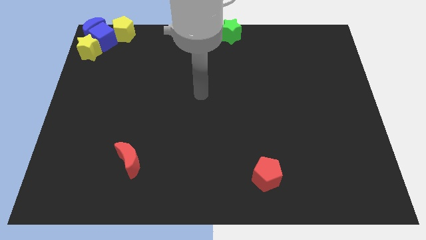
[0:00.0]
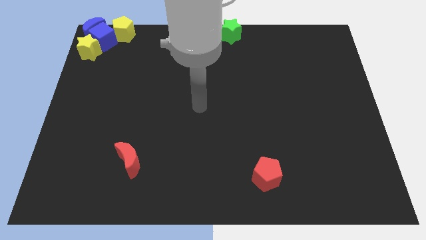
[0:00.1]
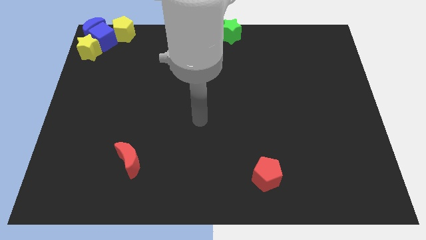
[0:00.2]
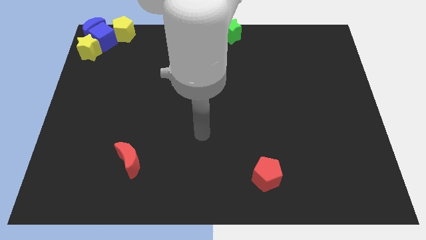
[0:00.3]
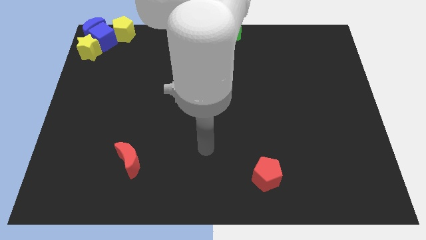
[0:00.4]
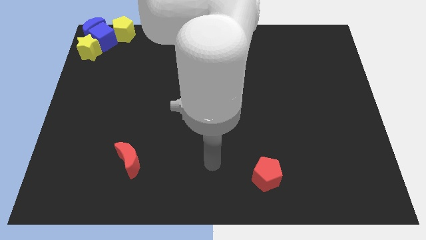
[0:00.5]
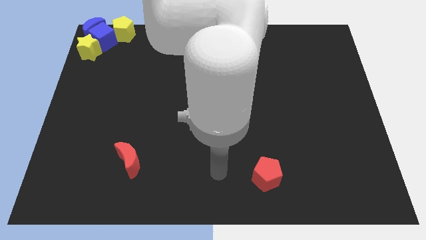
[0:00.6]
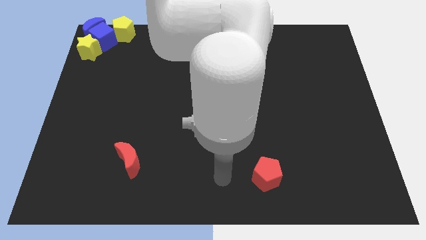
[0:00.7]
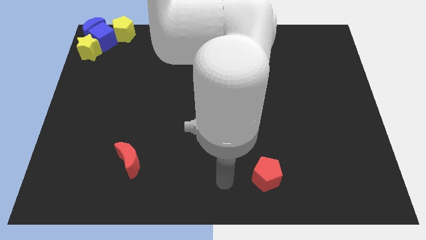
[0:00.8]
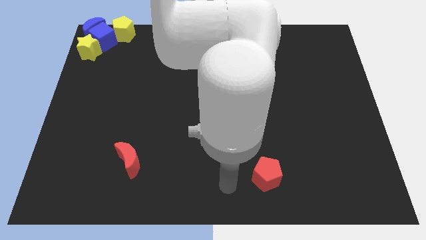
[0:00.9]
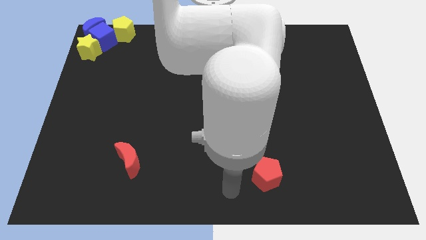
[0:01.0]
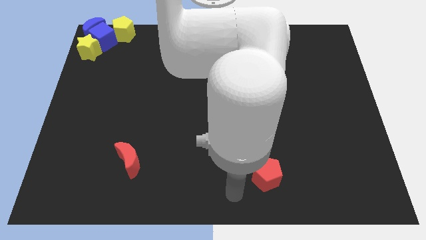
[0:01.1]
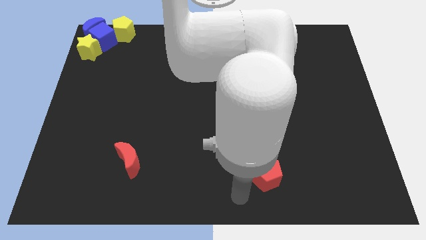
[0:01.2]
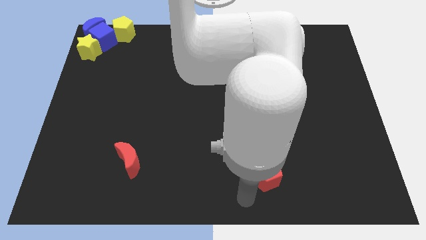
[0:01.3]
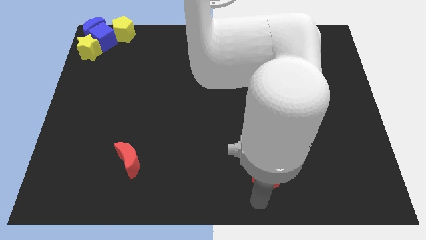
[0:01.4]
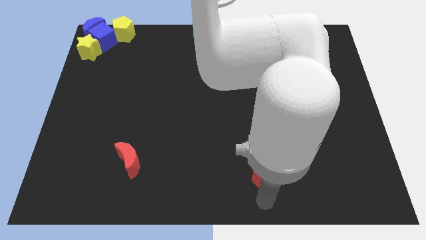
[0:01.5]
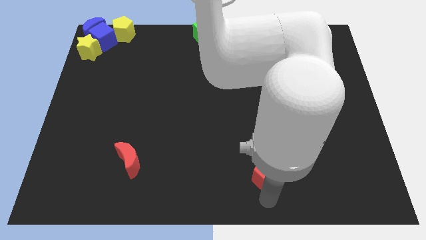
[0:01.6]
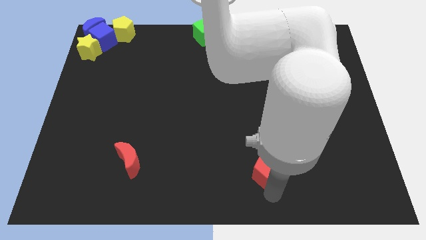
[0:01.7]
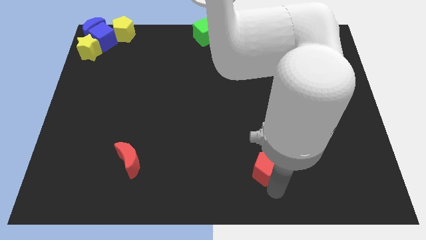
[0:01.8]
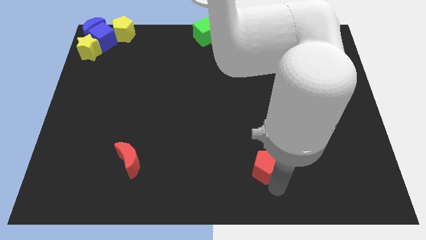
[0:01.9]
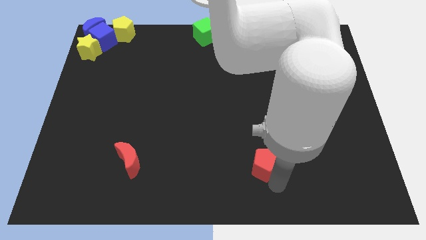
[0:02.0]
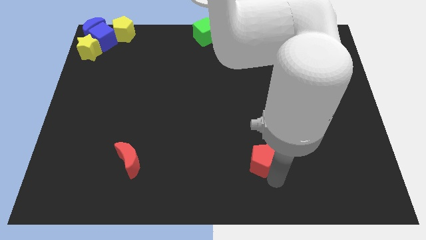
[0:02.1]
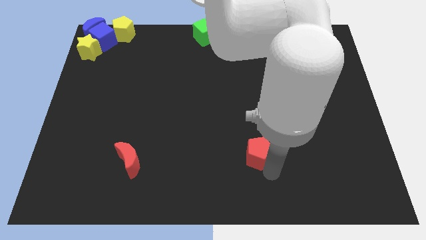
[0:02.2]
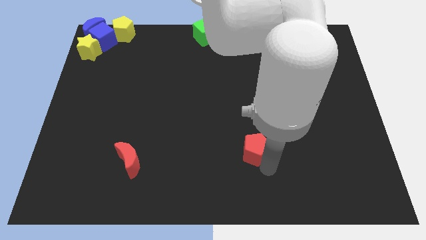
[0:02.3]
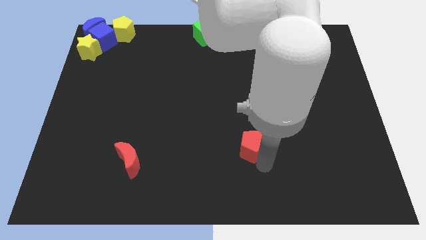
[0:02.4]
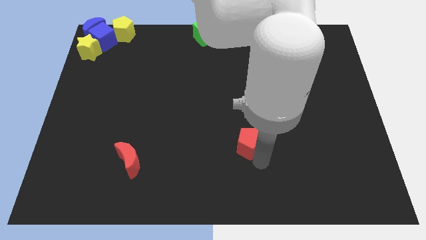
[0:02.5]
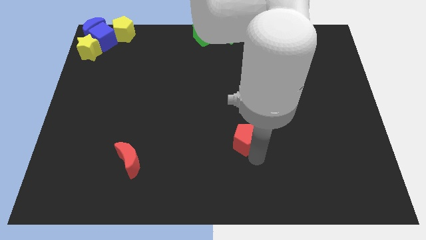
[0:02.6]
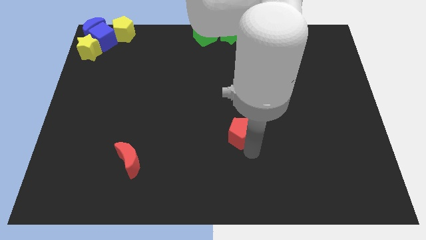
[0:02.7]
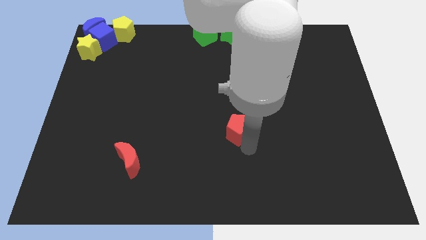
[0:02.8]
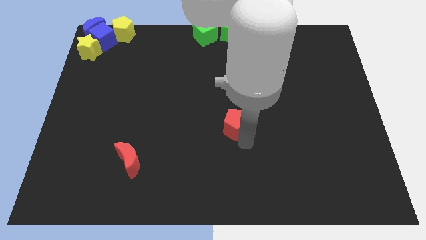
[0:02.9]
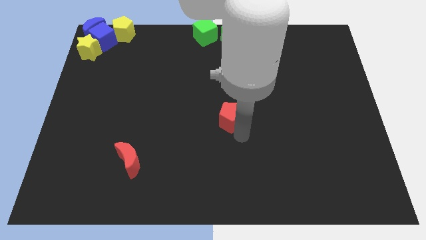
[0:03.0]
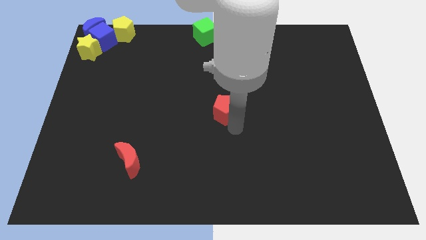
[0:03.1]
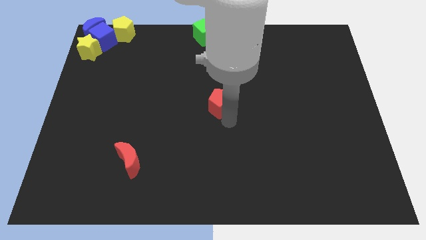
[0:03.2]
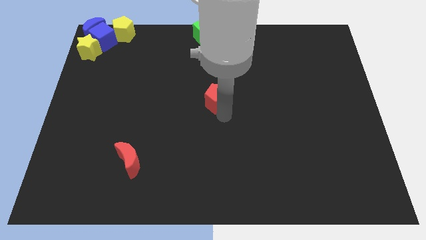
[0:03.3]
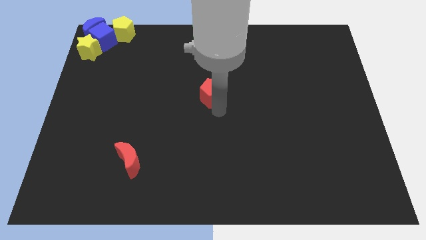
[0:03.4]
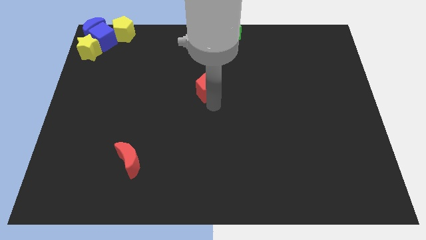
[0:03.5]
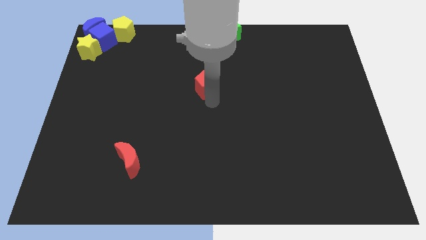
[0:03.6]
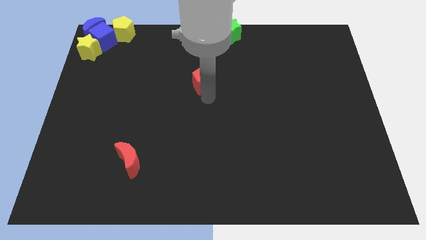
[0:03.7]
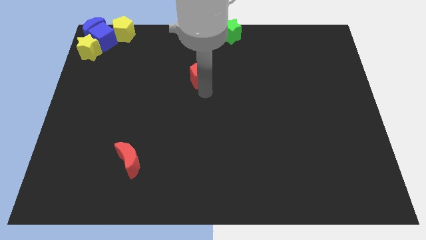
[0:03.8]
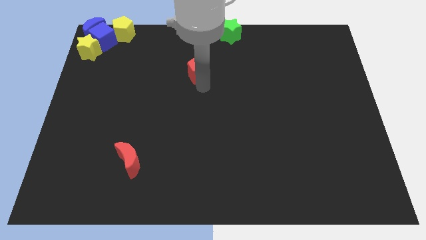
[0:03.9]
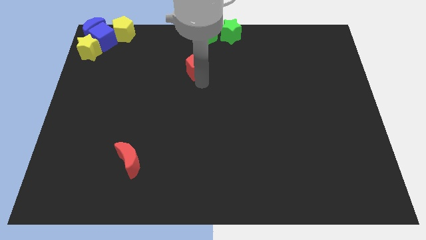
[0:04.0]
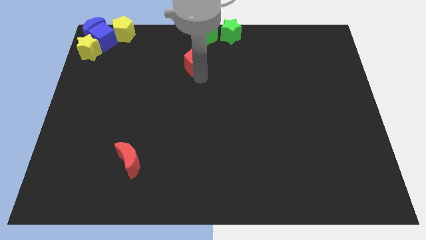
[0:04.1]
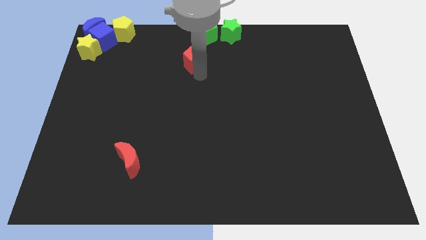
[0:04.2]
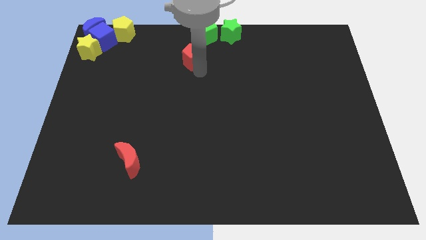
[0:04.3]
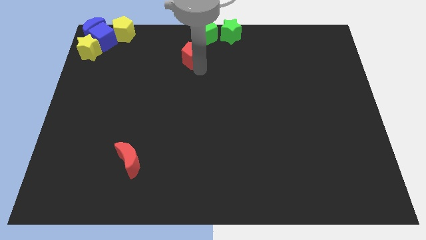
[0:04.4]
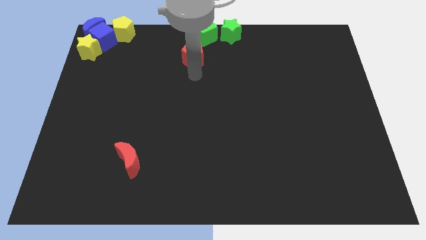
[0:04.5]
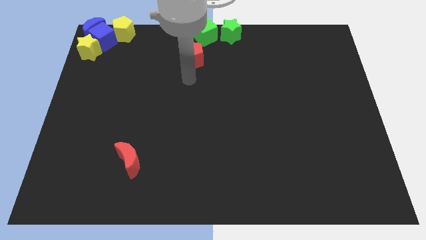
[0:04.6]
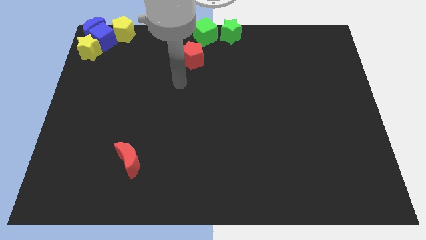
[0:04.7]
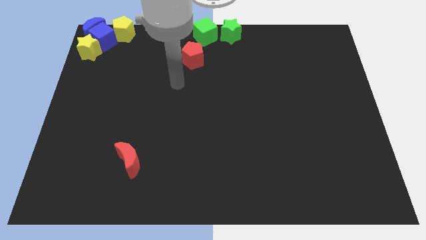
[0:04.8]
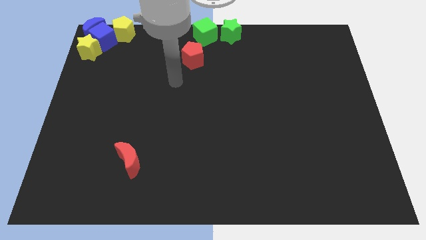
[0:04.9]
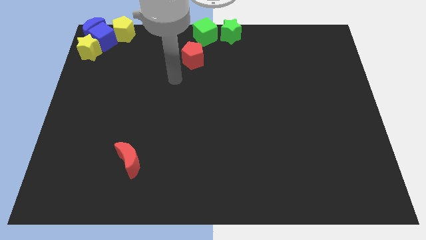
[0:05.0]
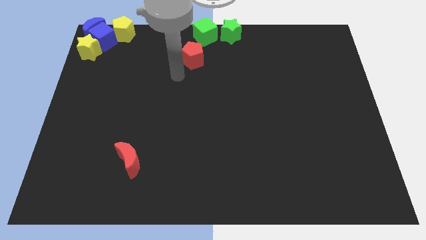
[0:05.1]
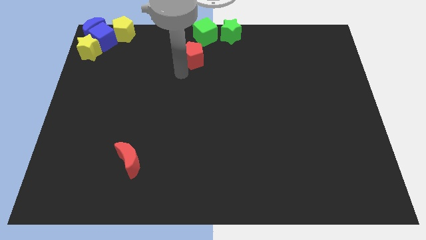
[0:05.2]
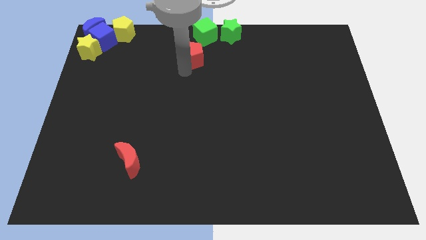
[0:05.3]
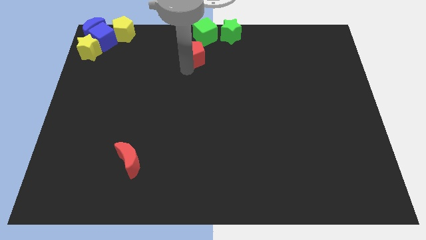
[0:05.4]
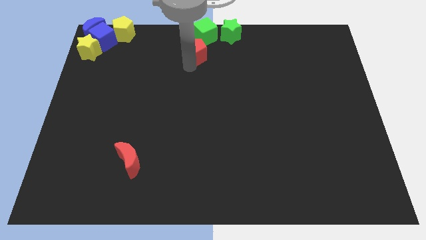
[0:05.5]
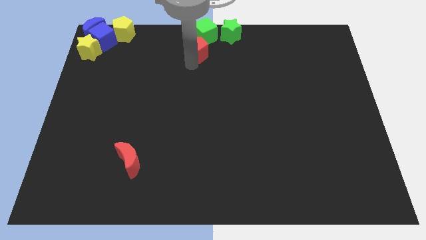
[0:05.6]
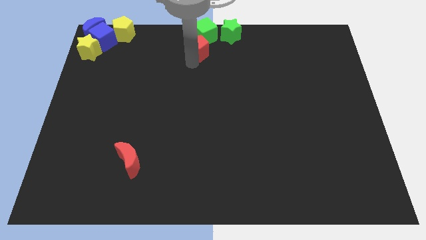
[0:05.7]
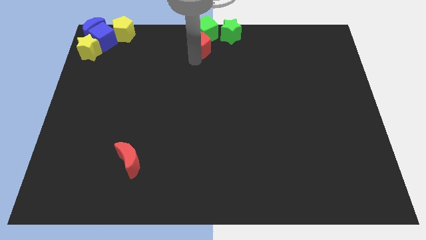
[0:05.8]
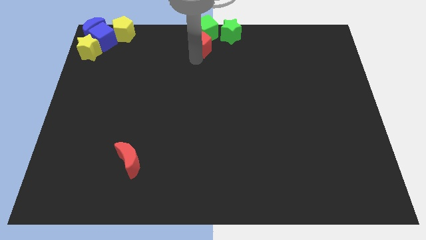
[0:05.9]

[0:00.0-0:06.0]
move red pentagon below the green cube

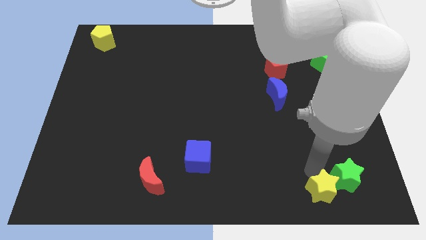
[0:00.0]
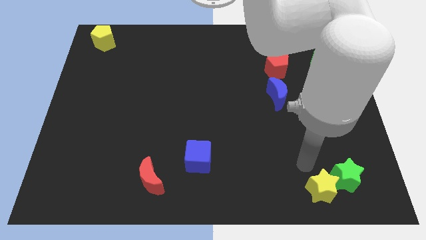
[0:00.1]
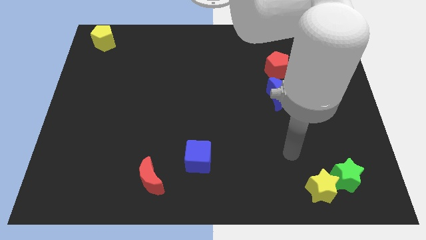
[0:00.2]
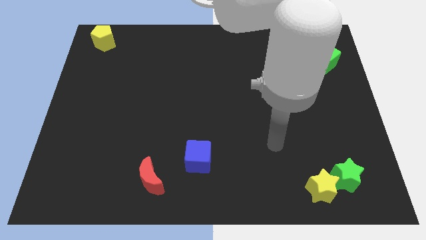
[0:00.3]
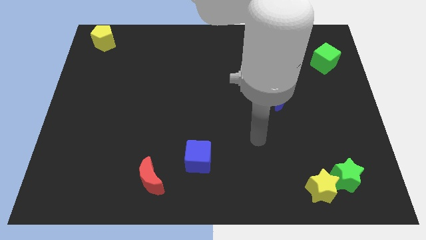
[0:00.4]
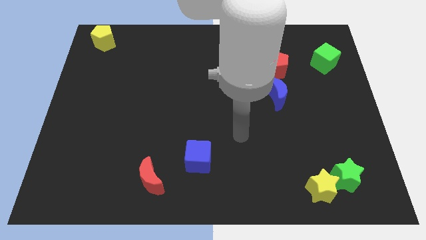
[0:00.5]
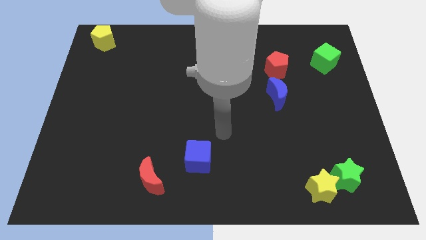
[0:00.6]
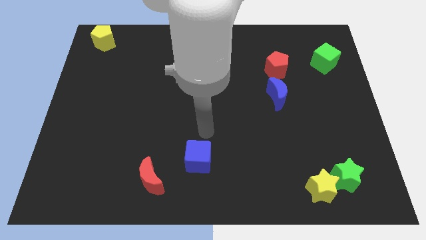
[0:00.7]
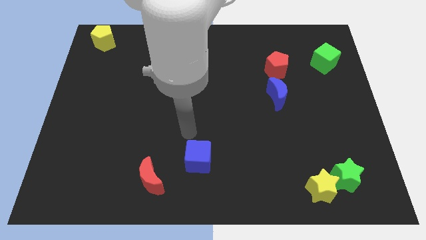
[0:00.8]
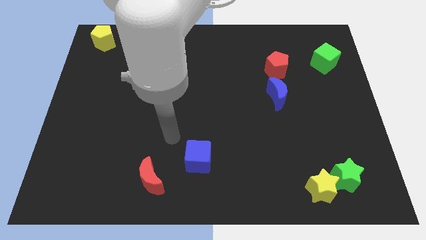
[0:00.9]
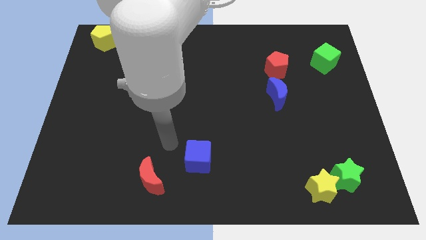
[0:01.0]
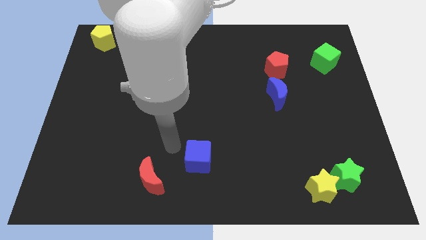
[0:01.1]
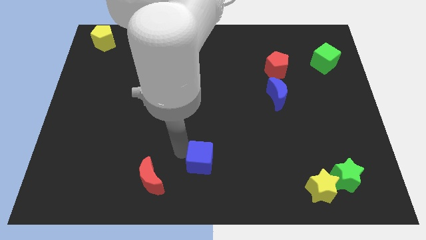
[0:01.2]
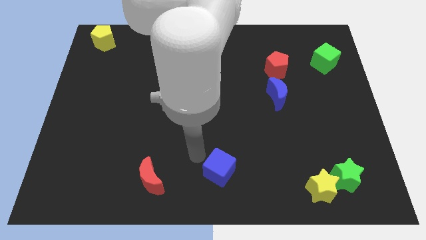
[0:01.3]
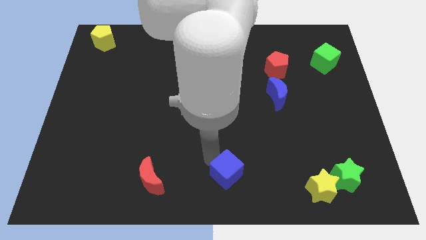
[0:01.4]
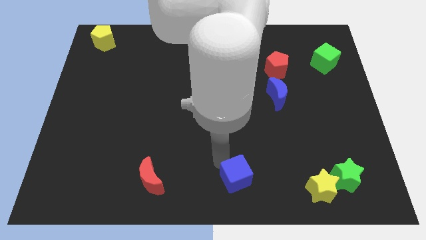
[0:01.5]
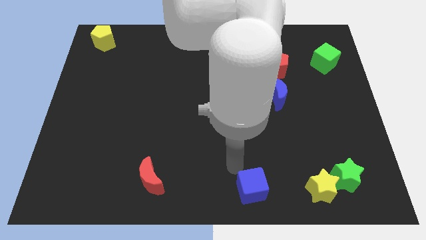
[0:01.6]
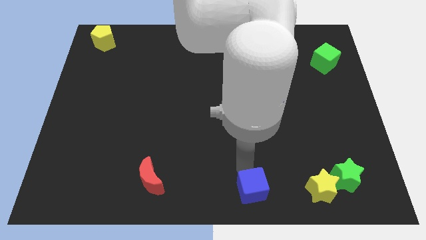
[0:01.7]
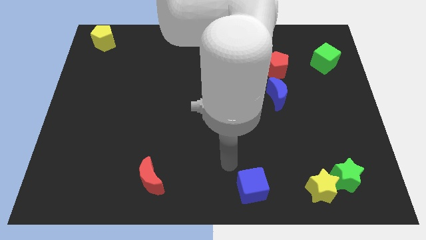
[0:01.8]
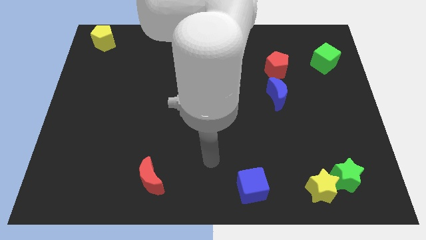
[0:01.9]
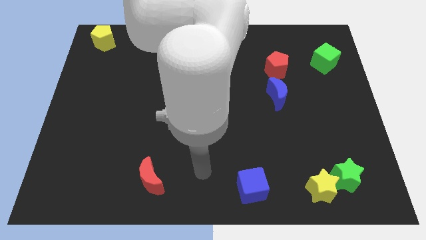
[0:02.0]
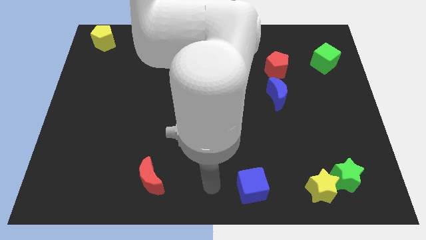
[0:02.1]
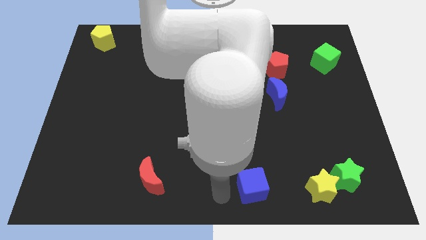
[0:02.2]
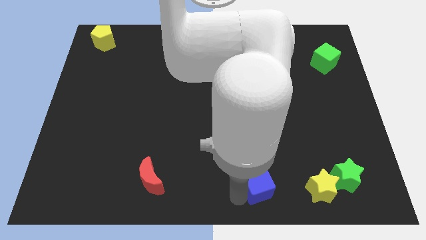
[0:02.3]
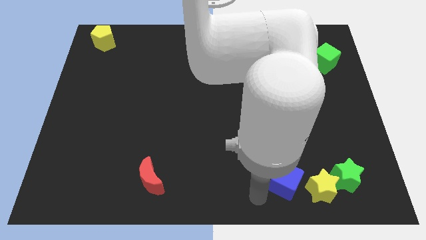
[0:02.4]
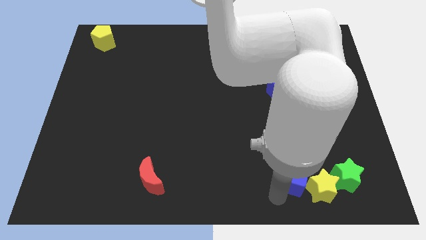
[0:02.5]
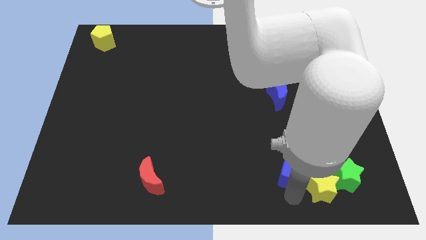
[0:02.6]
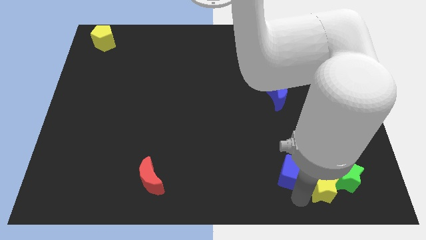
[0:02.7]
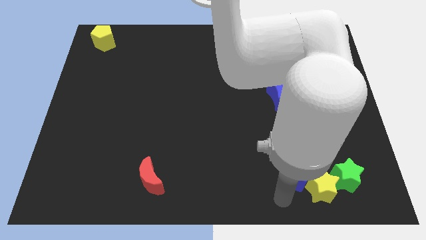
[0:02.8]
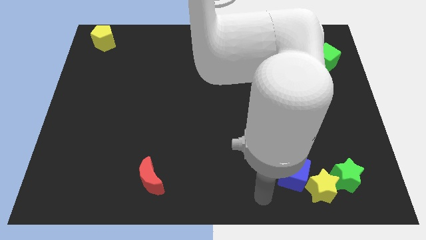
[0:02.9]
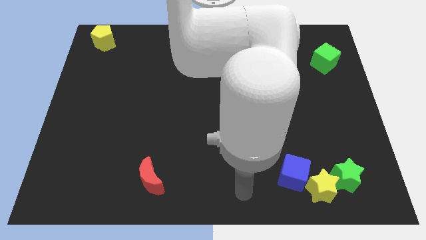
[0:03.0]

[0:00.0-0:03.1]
slide the blue cube into the left side of the
